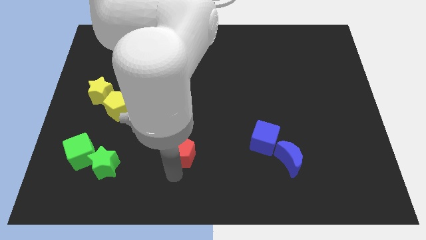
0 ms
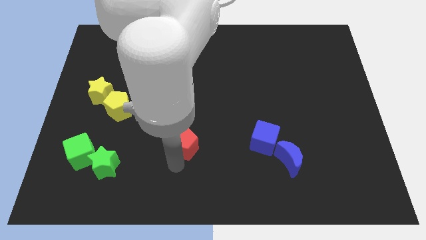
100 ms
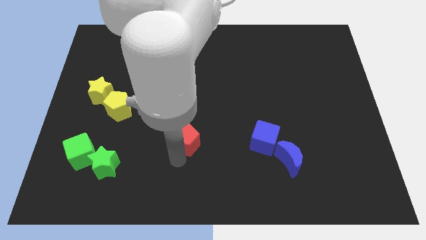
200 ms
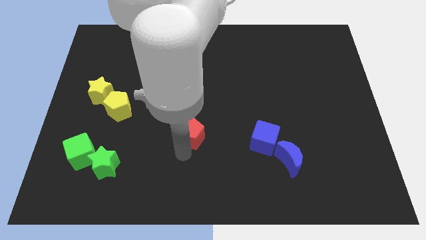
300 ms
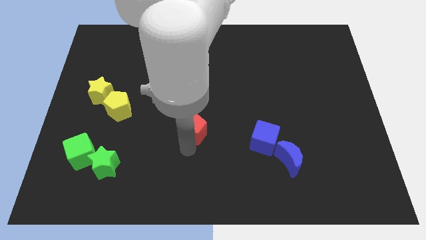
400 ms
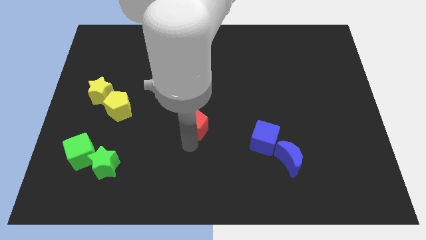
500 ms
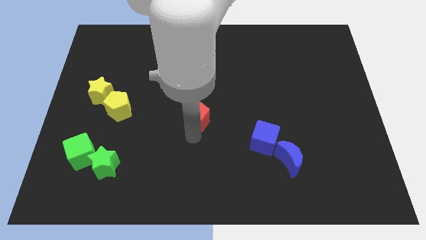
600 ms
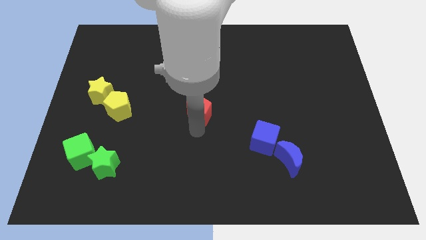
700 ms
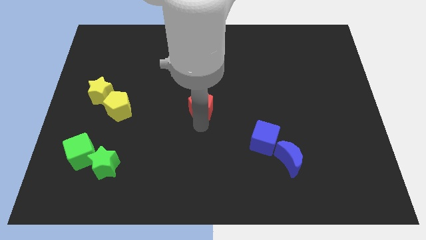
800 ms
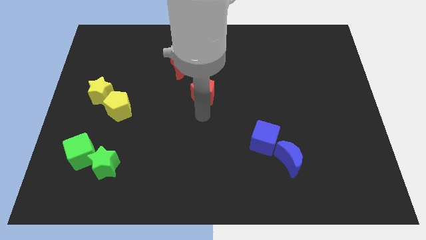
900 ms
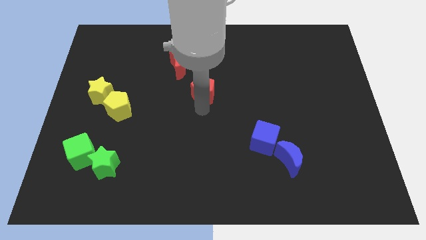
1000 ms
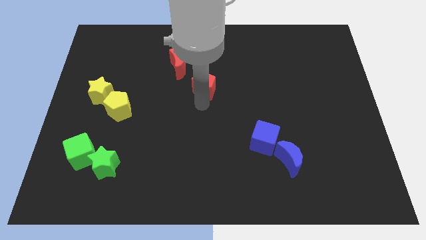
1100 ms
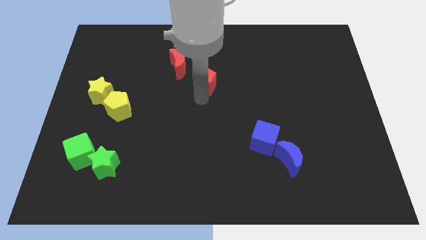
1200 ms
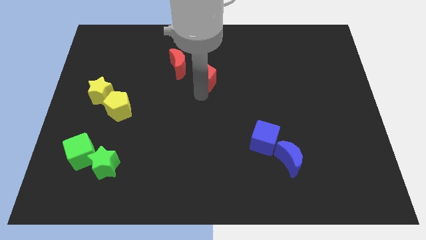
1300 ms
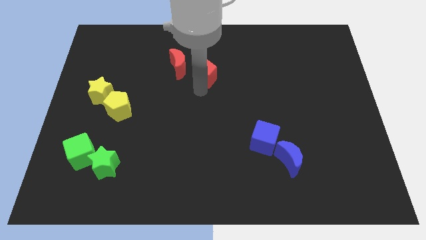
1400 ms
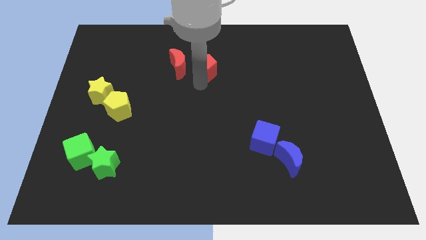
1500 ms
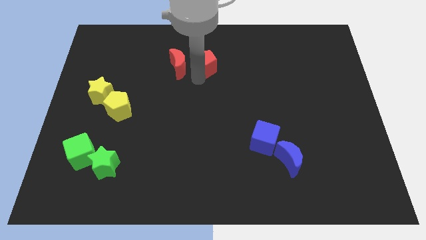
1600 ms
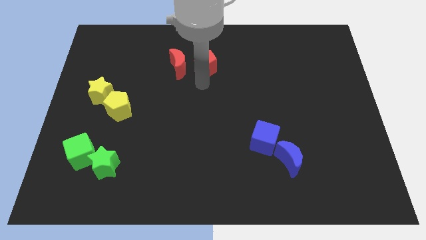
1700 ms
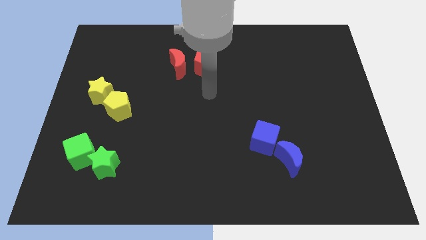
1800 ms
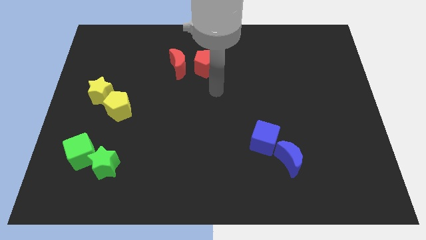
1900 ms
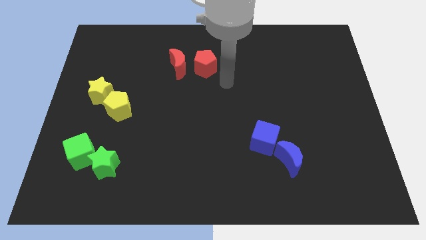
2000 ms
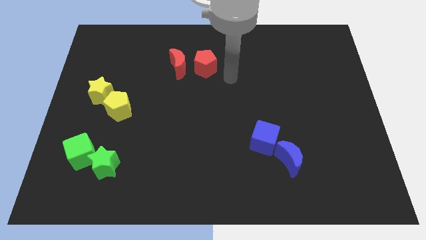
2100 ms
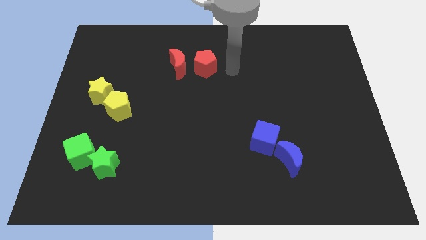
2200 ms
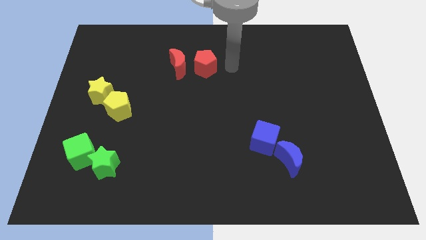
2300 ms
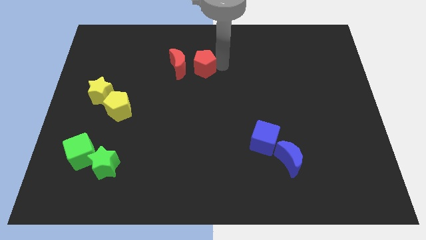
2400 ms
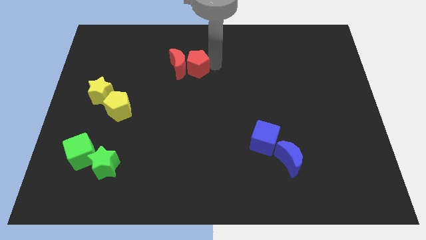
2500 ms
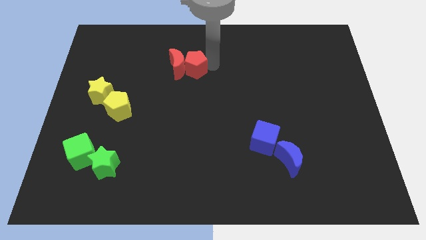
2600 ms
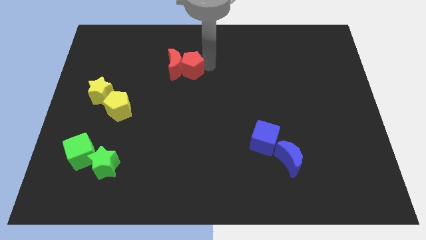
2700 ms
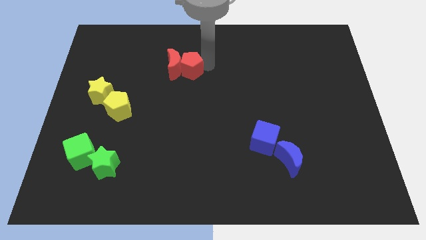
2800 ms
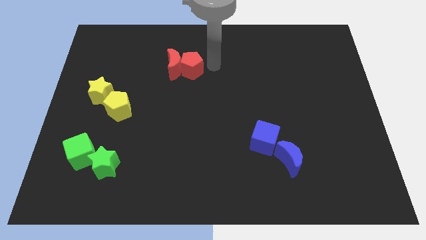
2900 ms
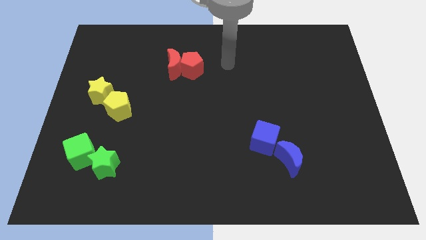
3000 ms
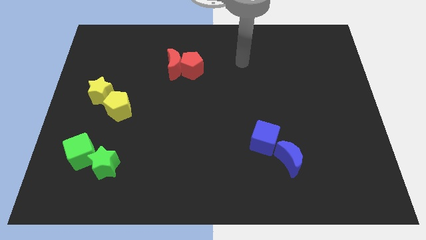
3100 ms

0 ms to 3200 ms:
slide the red pentagon into the red crescent

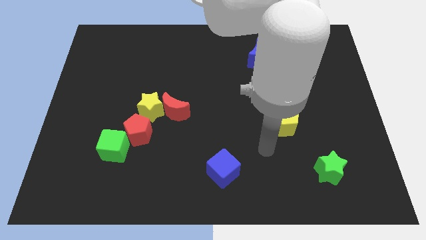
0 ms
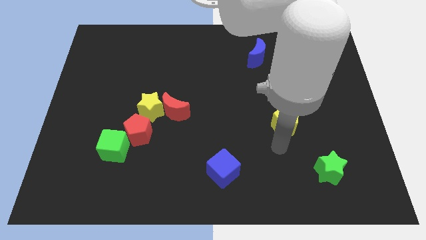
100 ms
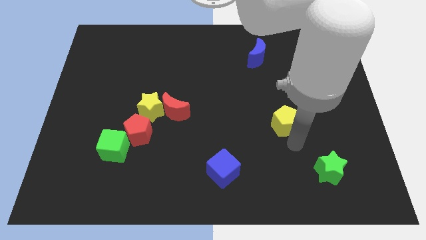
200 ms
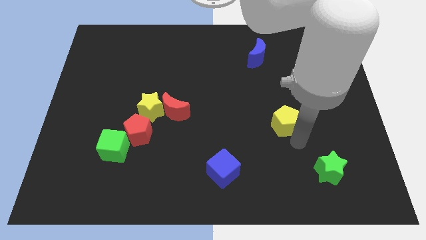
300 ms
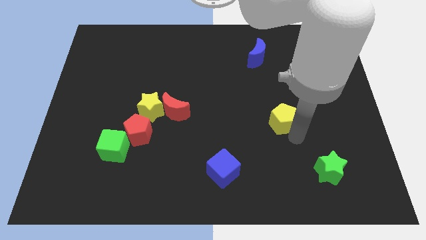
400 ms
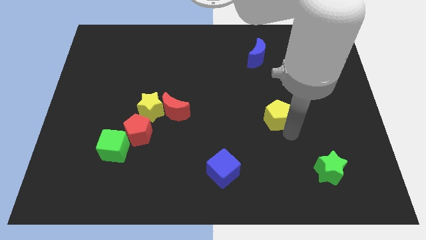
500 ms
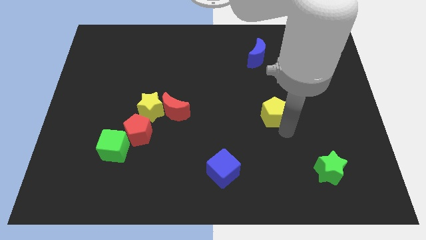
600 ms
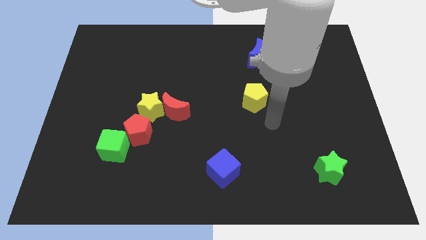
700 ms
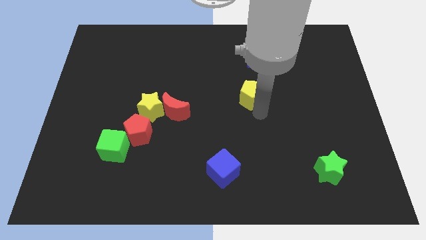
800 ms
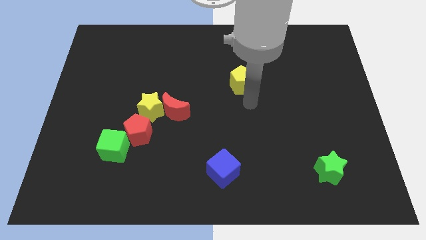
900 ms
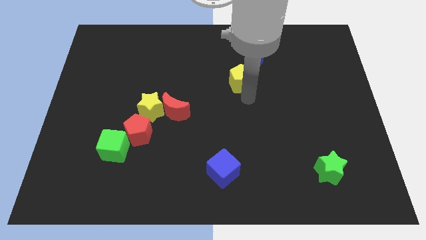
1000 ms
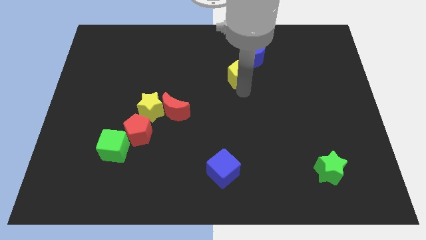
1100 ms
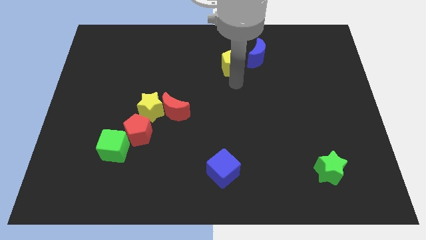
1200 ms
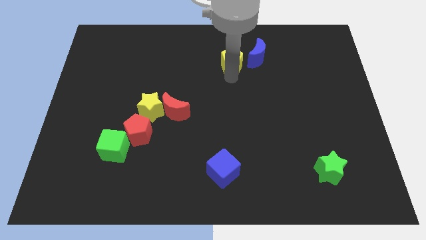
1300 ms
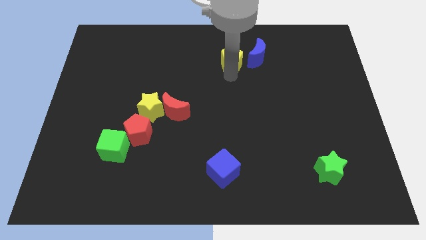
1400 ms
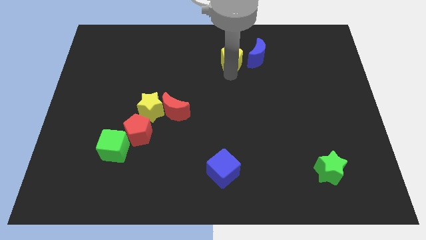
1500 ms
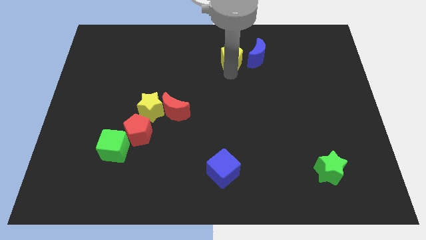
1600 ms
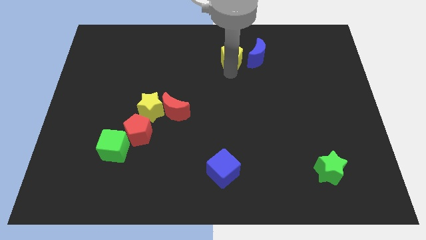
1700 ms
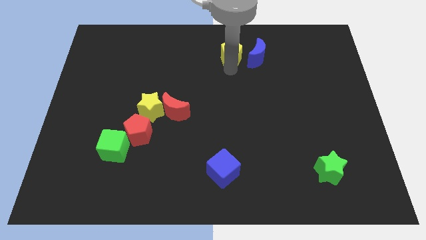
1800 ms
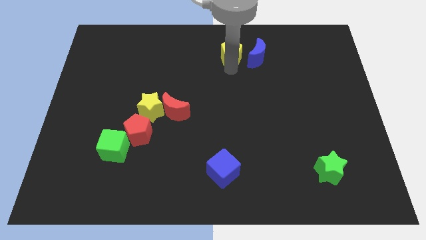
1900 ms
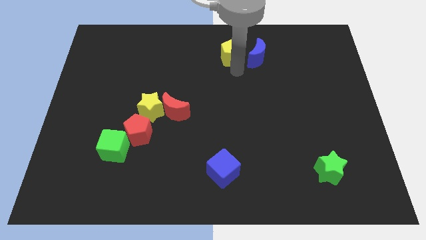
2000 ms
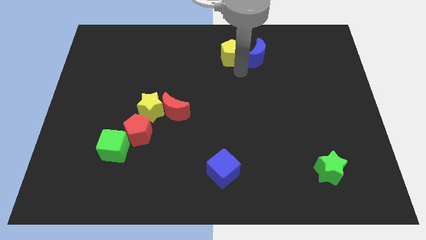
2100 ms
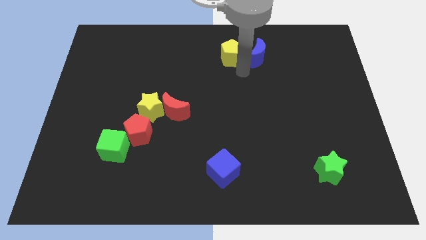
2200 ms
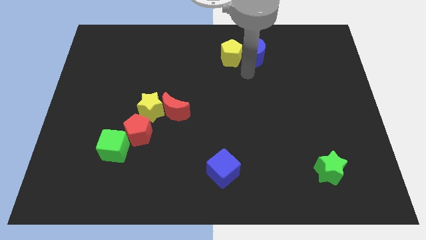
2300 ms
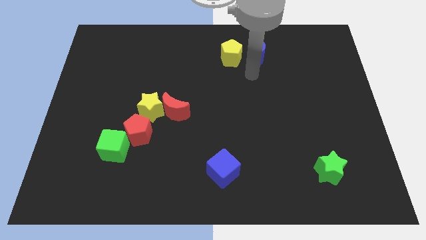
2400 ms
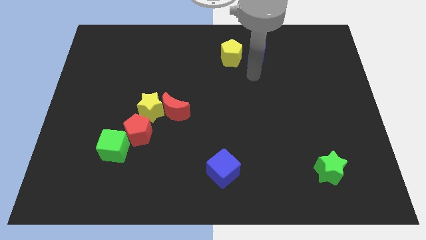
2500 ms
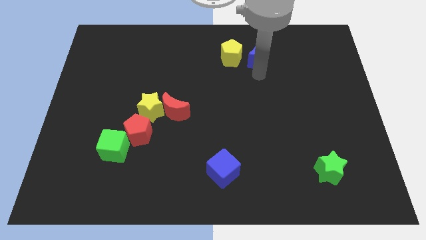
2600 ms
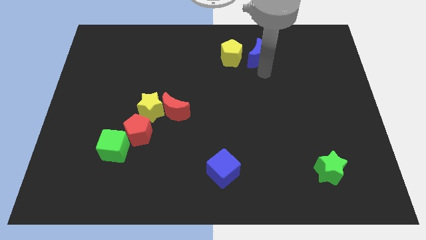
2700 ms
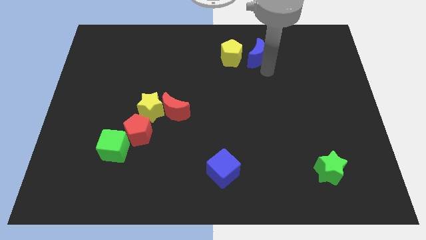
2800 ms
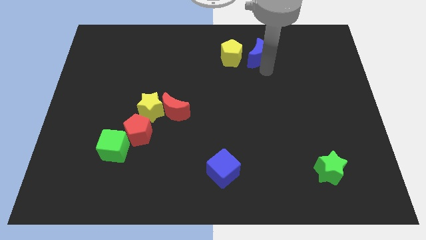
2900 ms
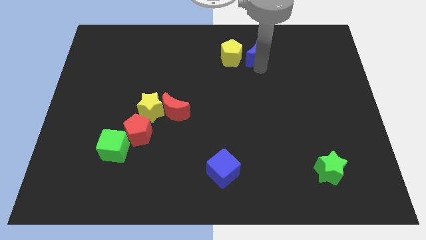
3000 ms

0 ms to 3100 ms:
move the yellow pentagon to the left side of the blue crescent

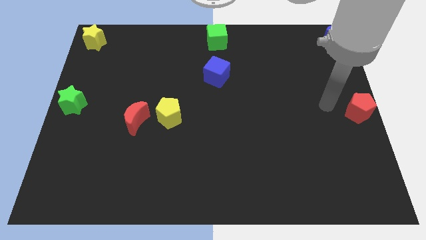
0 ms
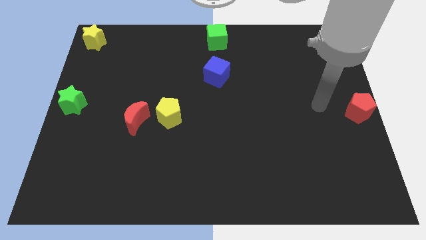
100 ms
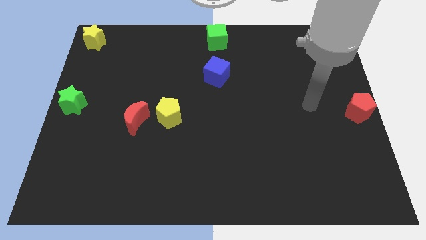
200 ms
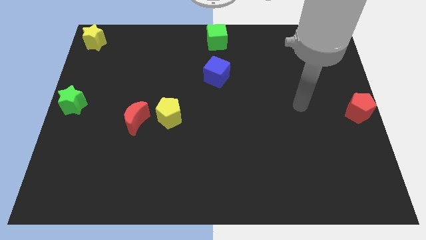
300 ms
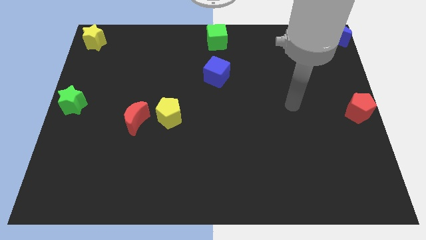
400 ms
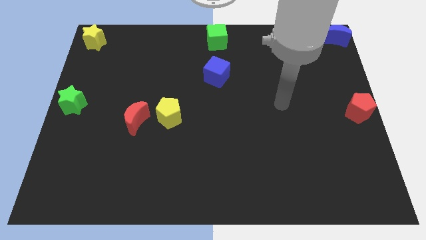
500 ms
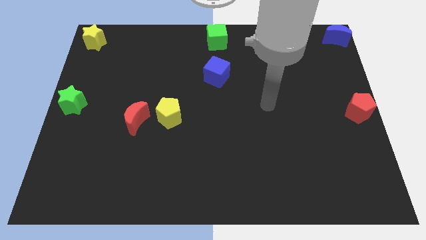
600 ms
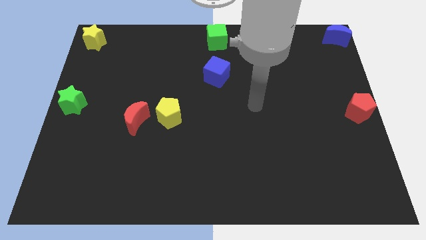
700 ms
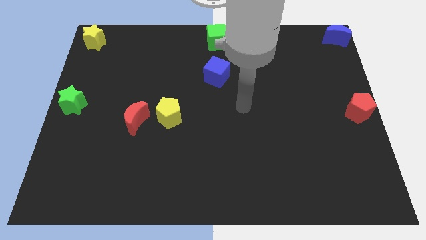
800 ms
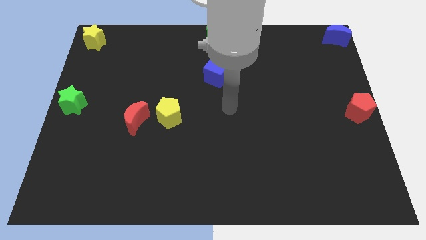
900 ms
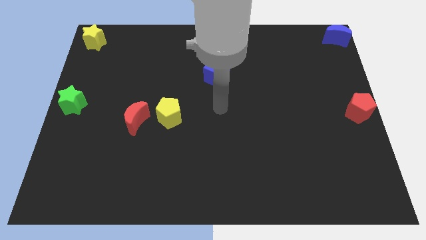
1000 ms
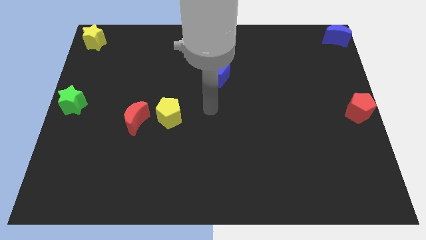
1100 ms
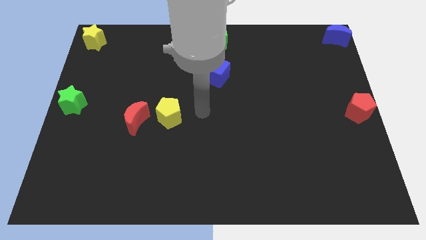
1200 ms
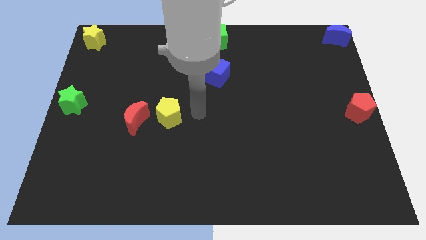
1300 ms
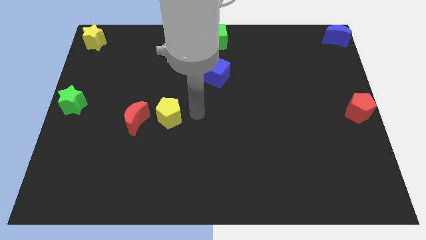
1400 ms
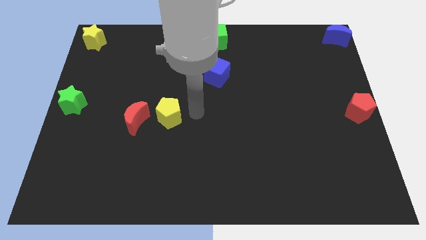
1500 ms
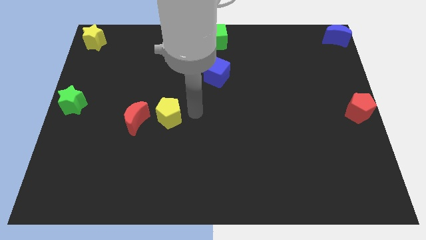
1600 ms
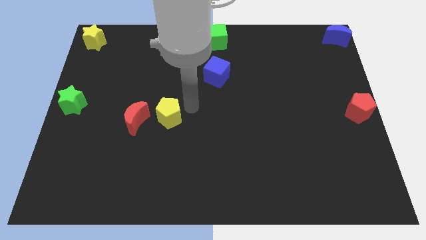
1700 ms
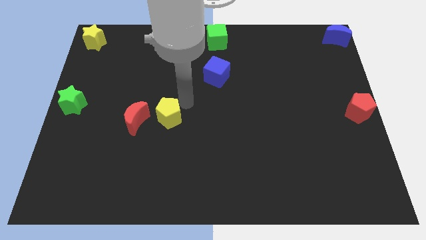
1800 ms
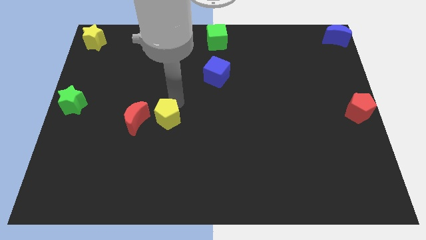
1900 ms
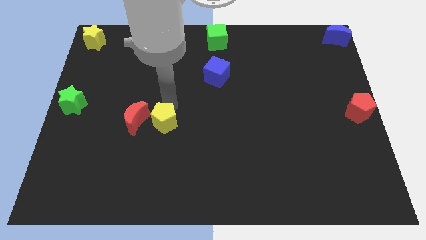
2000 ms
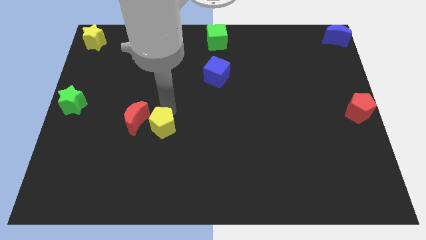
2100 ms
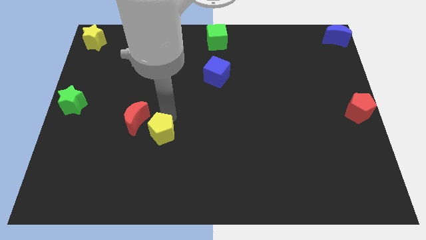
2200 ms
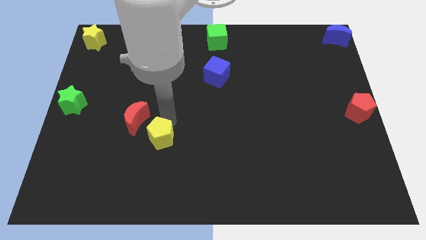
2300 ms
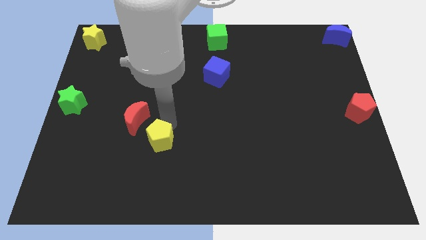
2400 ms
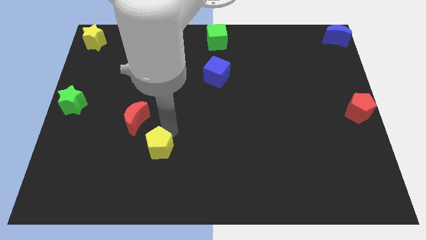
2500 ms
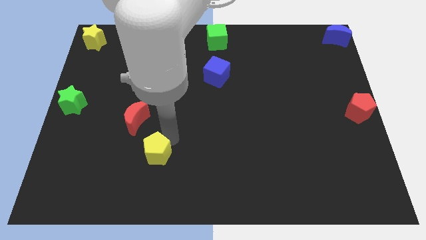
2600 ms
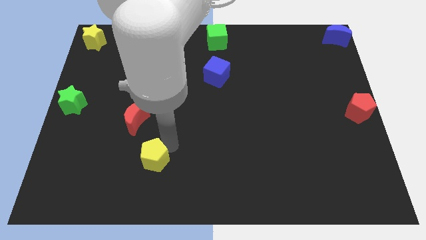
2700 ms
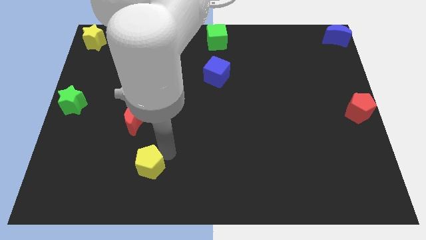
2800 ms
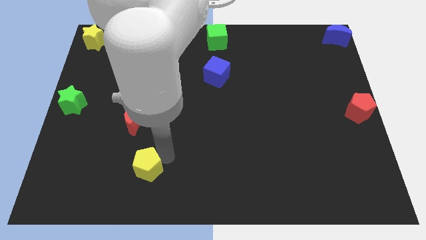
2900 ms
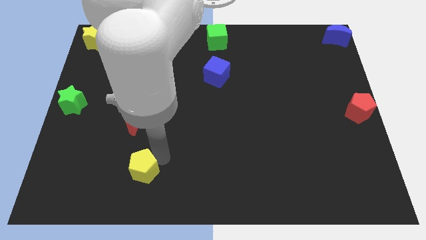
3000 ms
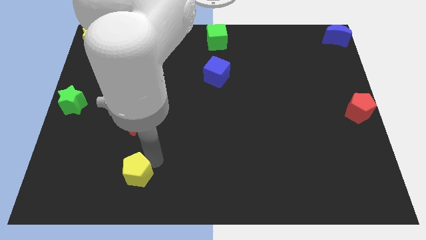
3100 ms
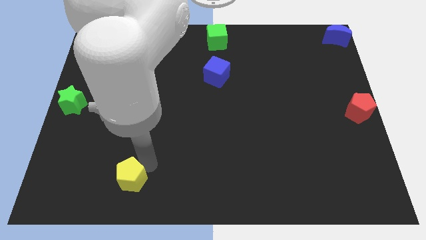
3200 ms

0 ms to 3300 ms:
place the yellow pentagon at the bottom side of the red moon
